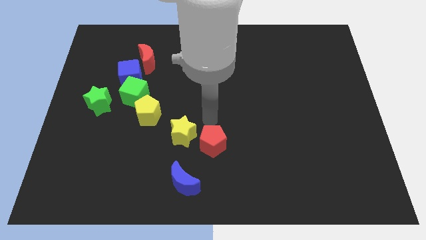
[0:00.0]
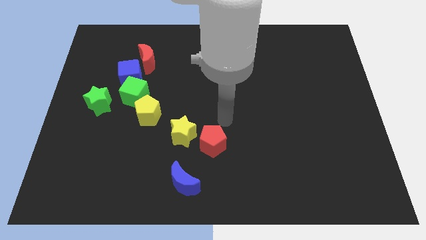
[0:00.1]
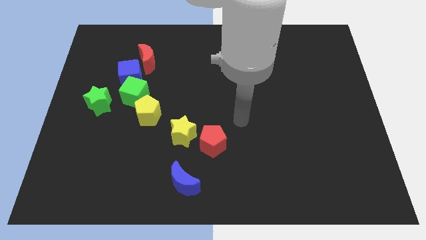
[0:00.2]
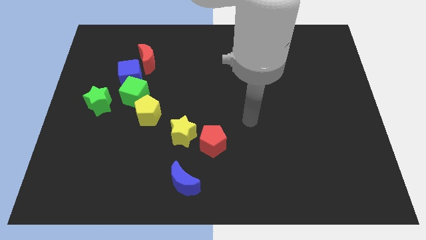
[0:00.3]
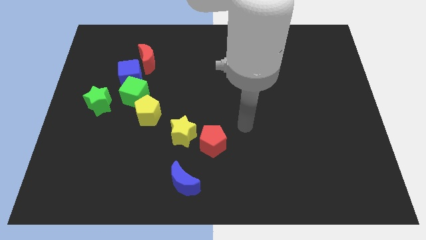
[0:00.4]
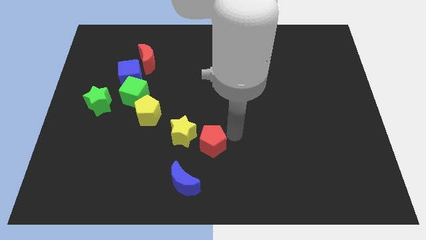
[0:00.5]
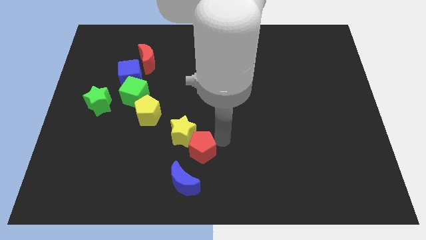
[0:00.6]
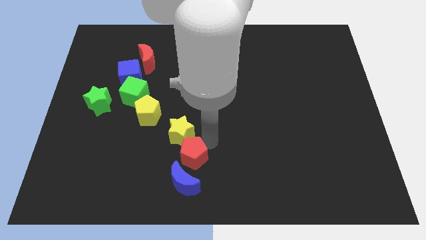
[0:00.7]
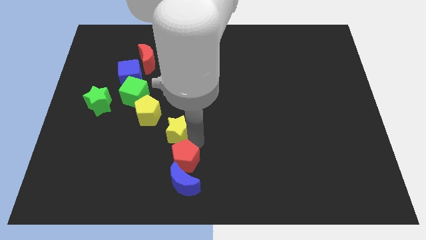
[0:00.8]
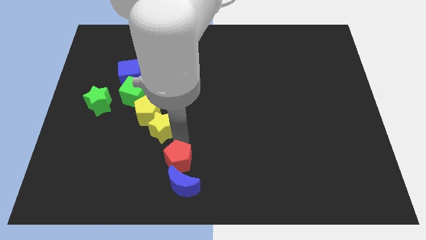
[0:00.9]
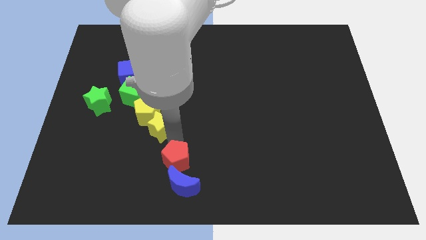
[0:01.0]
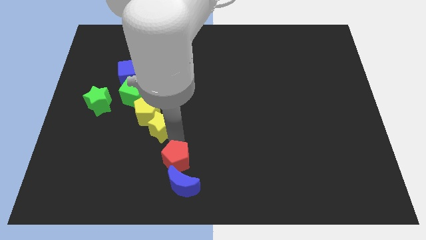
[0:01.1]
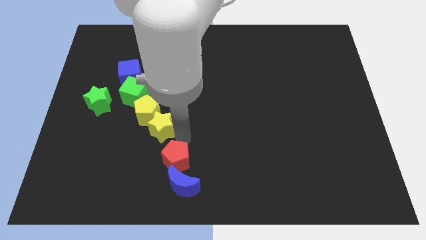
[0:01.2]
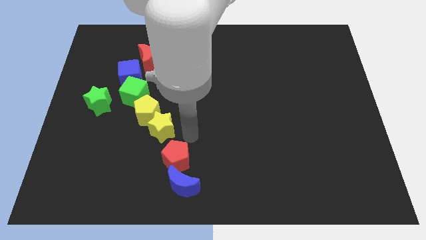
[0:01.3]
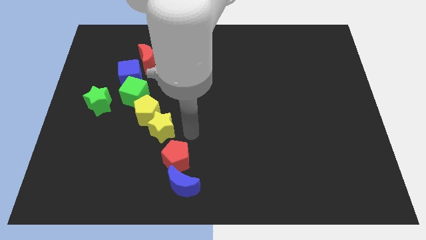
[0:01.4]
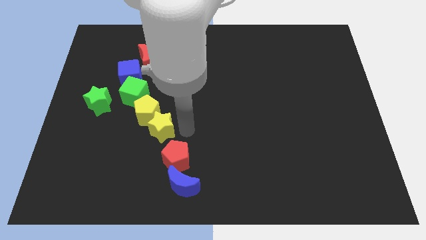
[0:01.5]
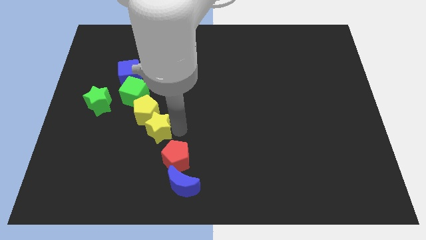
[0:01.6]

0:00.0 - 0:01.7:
place the red pentagon on top of the blue crescent

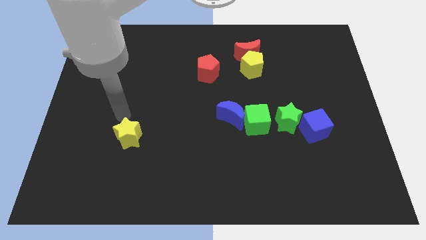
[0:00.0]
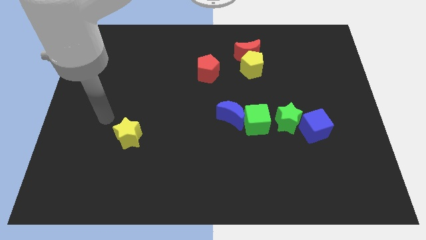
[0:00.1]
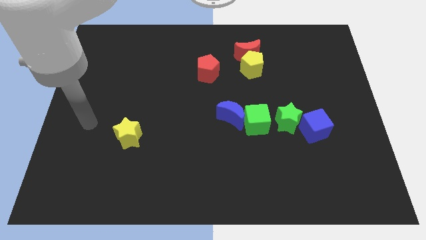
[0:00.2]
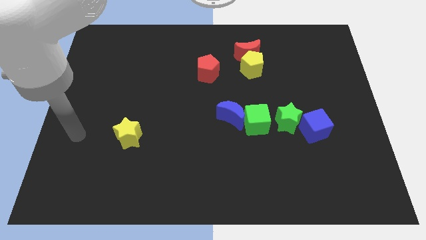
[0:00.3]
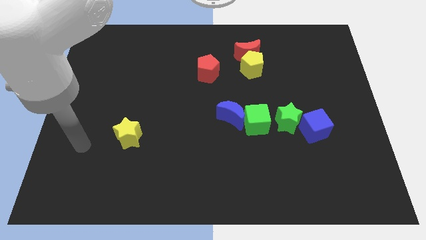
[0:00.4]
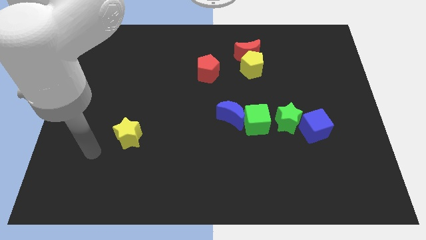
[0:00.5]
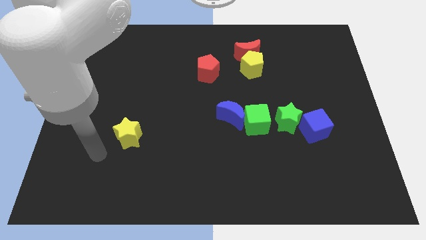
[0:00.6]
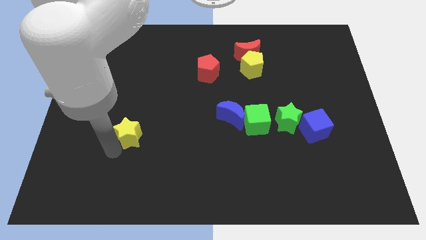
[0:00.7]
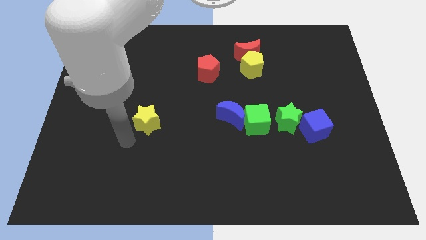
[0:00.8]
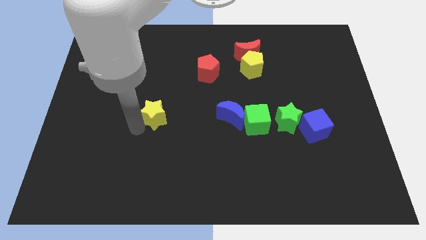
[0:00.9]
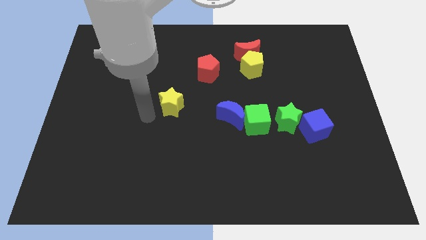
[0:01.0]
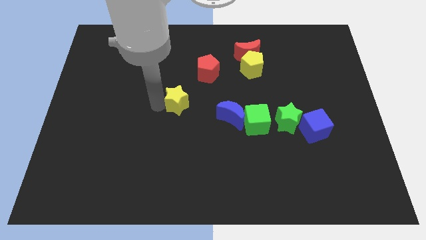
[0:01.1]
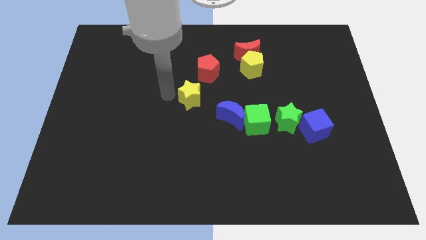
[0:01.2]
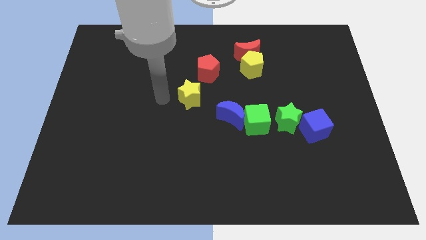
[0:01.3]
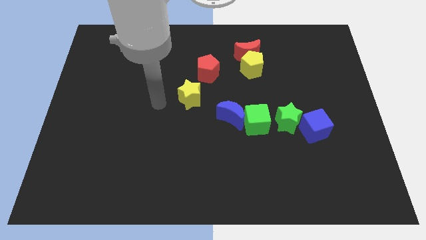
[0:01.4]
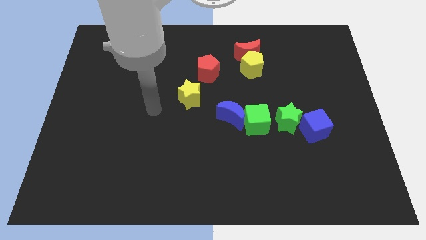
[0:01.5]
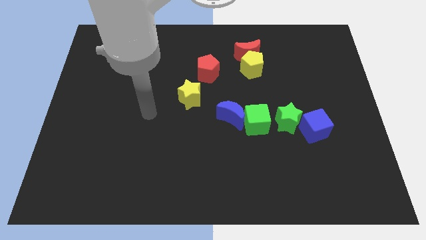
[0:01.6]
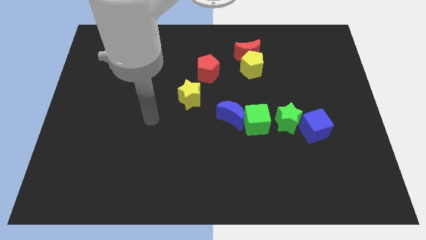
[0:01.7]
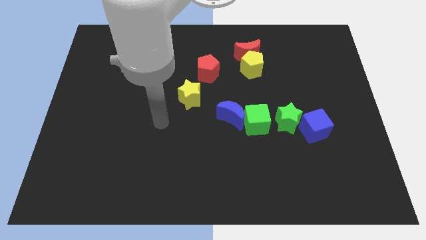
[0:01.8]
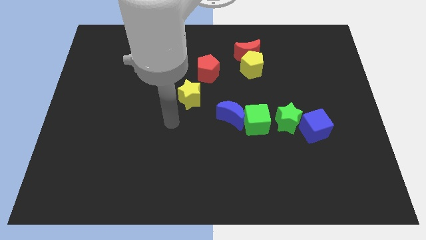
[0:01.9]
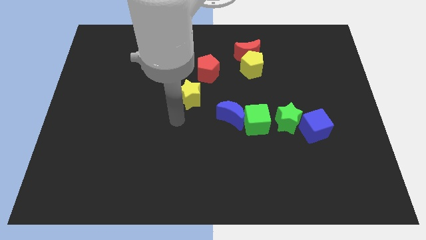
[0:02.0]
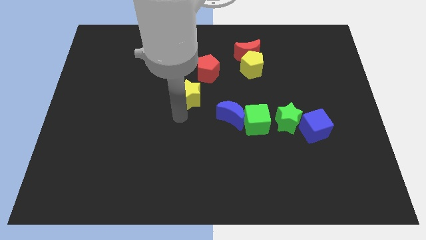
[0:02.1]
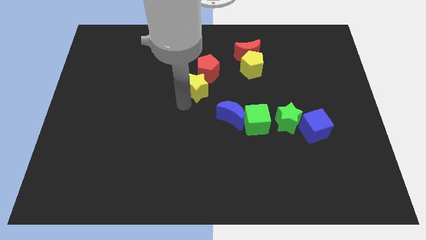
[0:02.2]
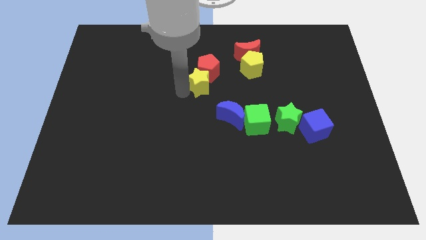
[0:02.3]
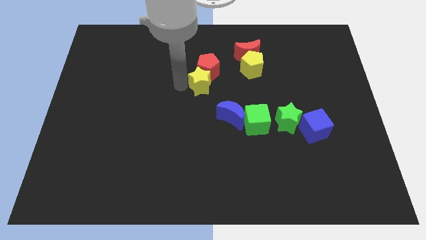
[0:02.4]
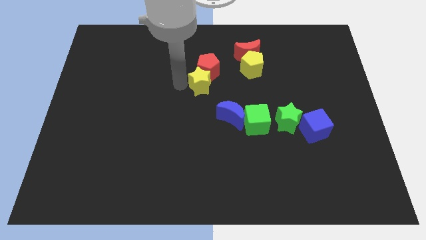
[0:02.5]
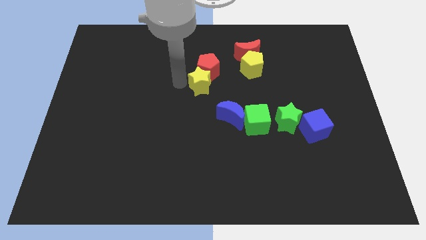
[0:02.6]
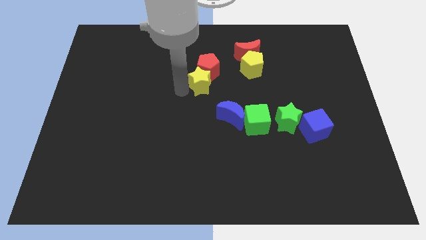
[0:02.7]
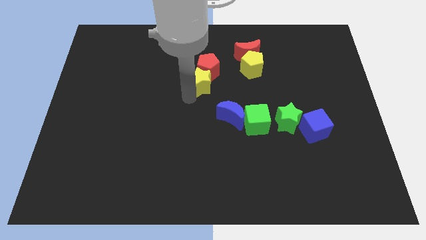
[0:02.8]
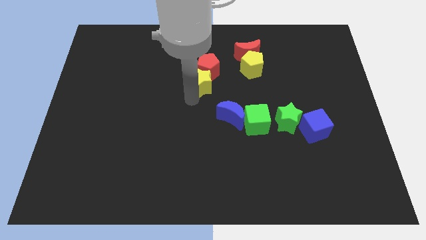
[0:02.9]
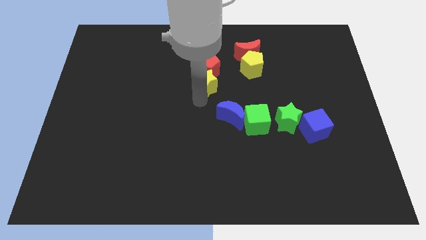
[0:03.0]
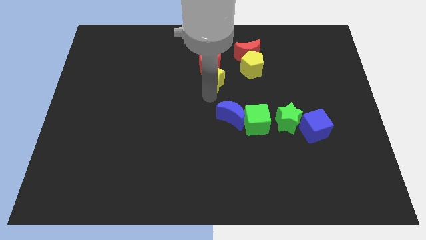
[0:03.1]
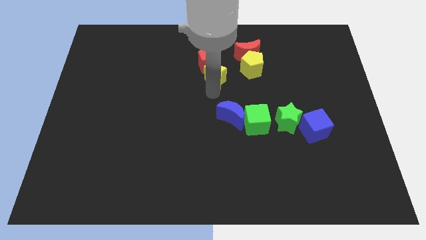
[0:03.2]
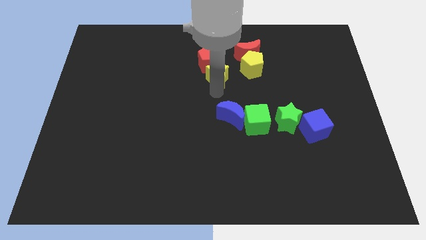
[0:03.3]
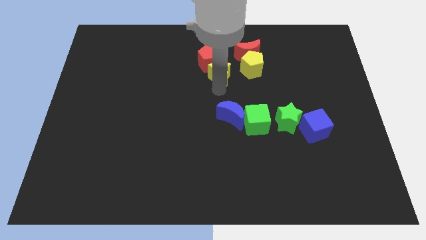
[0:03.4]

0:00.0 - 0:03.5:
push the yellow star into the red pentagon

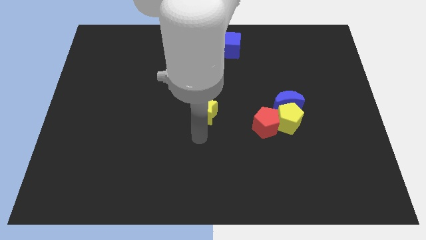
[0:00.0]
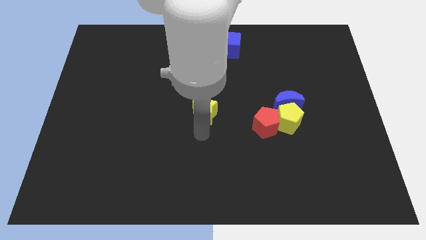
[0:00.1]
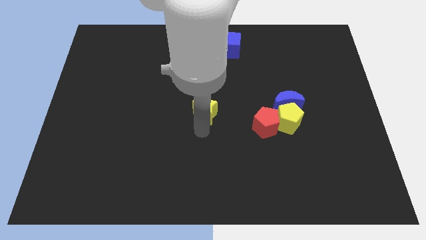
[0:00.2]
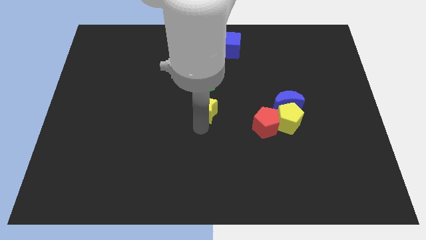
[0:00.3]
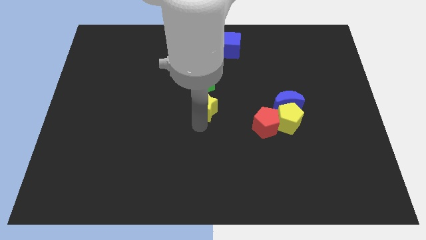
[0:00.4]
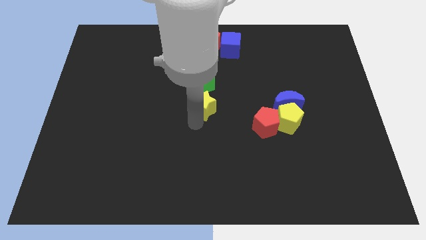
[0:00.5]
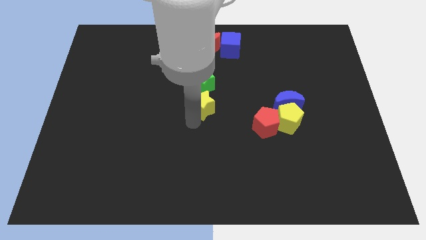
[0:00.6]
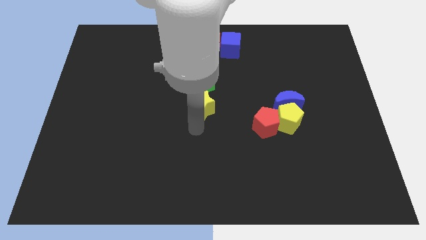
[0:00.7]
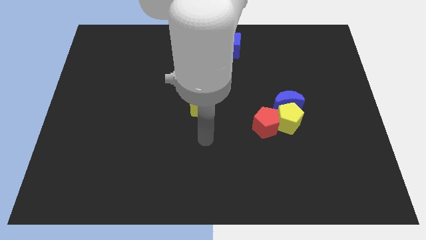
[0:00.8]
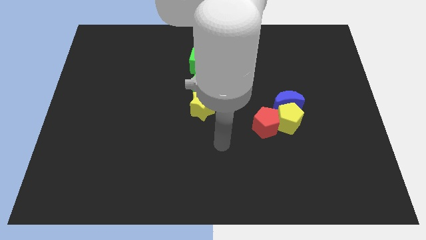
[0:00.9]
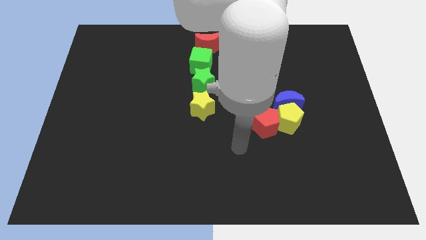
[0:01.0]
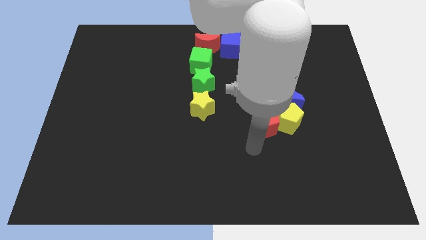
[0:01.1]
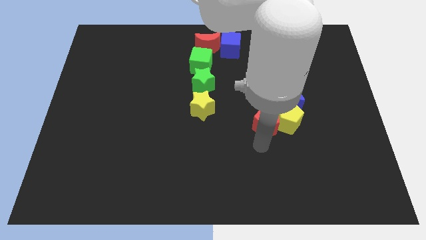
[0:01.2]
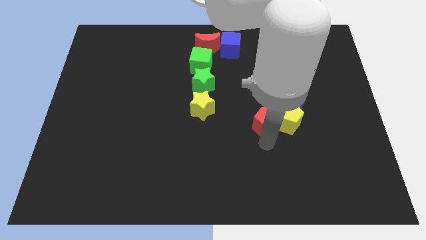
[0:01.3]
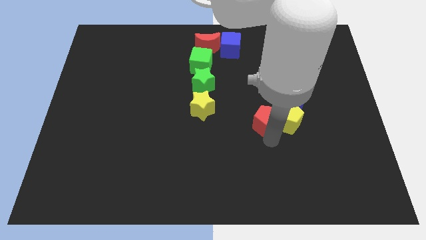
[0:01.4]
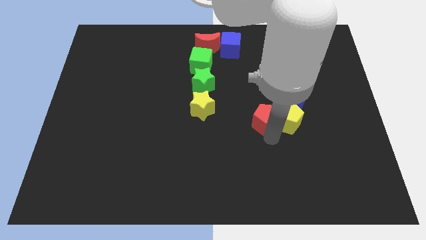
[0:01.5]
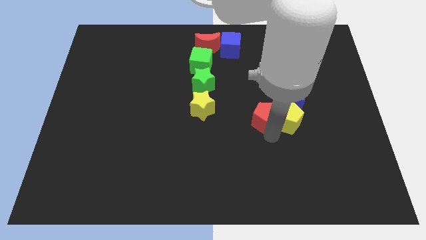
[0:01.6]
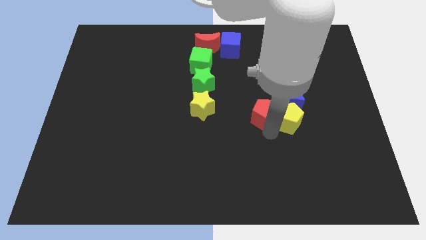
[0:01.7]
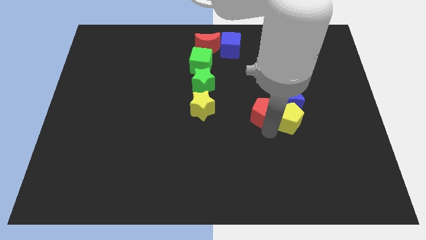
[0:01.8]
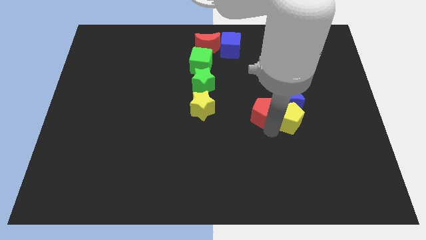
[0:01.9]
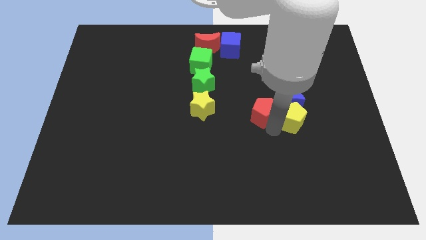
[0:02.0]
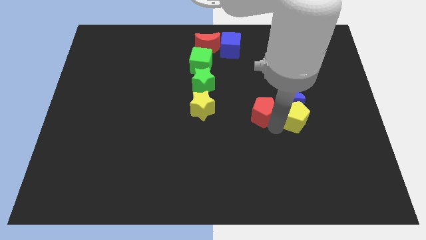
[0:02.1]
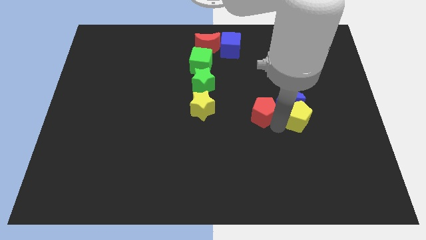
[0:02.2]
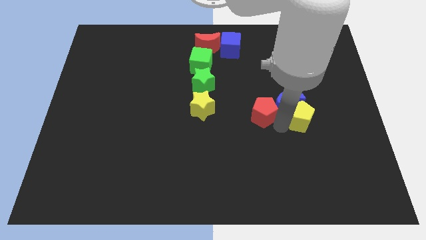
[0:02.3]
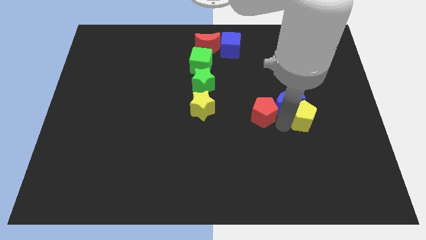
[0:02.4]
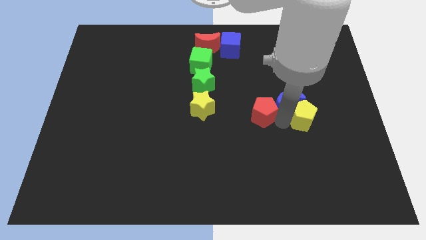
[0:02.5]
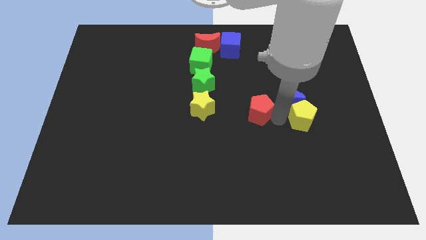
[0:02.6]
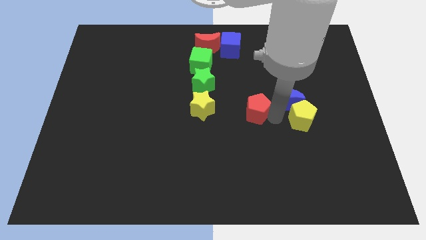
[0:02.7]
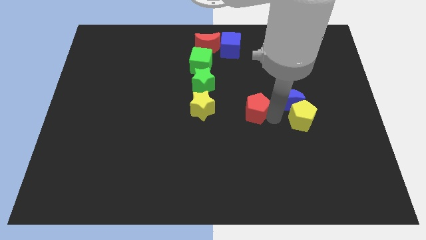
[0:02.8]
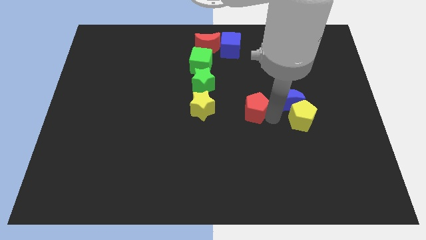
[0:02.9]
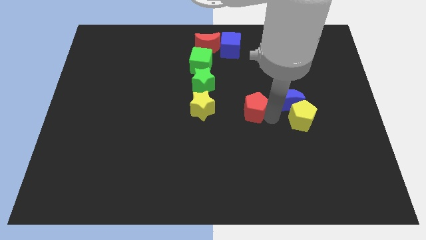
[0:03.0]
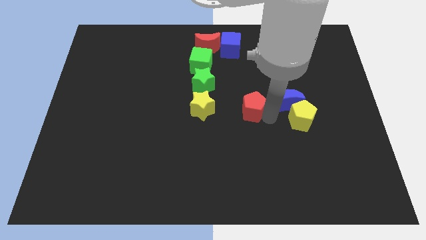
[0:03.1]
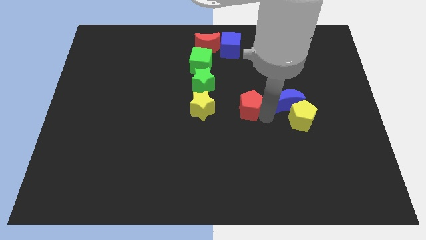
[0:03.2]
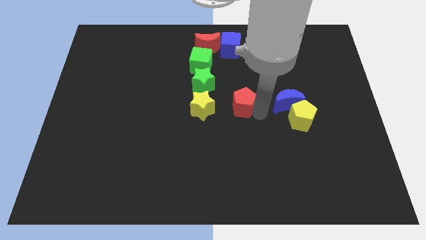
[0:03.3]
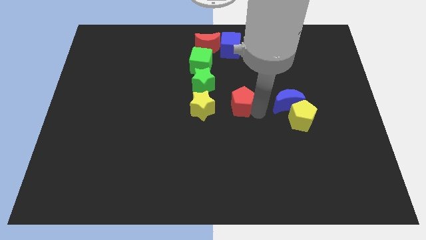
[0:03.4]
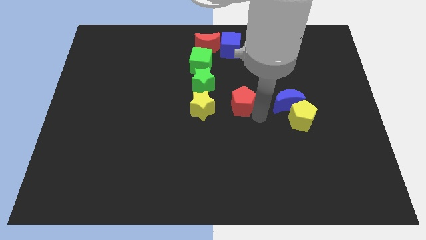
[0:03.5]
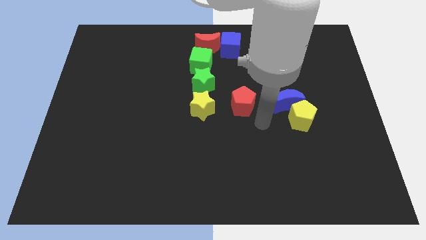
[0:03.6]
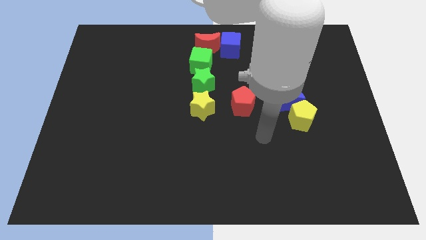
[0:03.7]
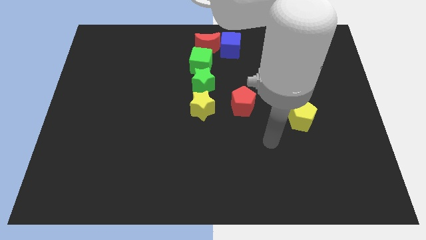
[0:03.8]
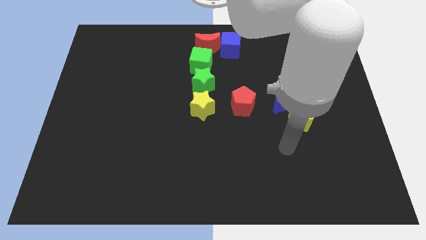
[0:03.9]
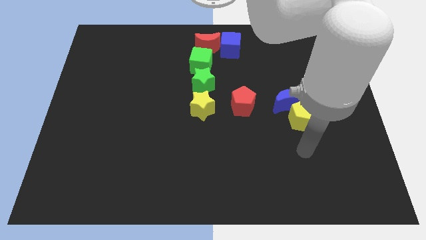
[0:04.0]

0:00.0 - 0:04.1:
move red pentagon to the left of blue moon
